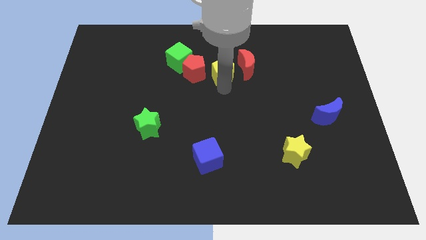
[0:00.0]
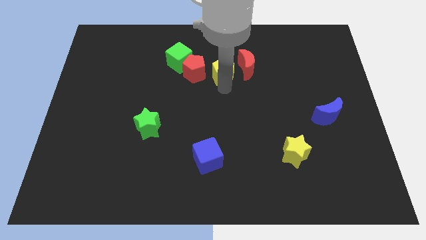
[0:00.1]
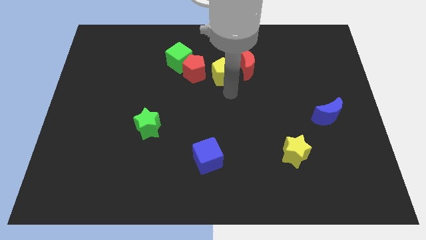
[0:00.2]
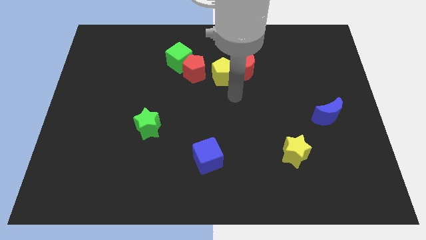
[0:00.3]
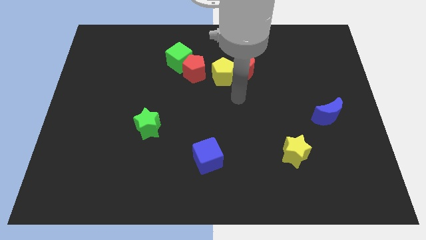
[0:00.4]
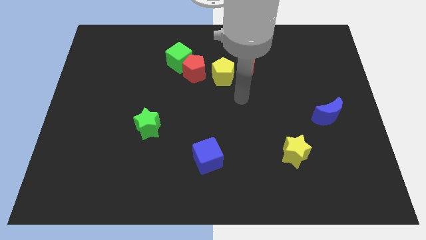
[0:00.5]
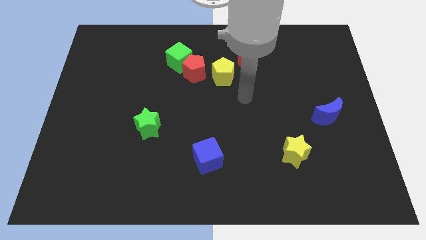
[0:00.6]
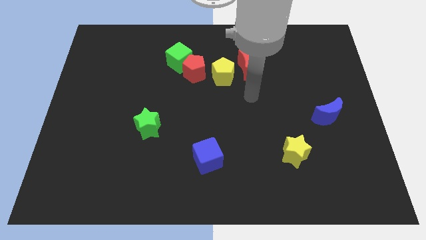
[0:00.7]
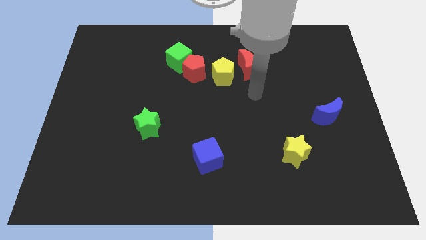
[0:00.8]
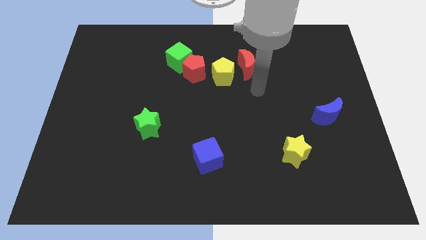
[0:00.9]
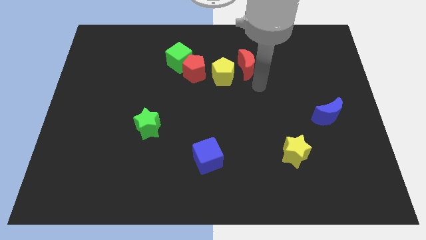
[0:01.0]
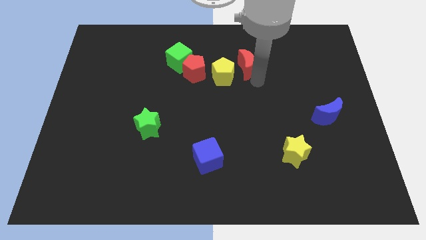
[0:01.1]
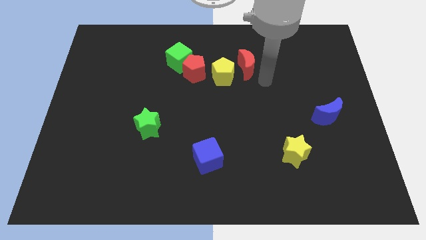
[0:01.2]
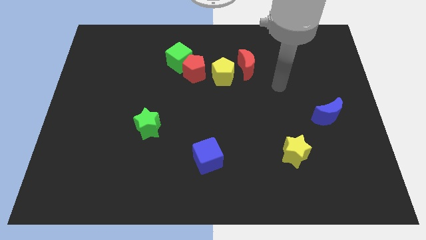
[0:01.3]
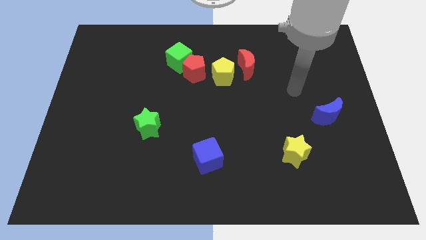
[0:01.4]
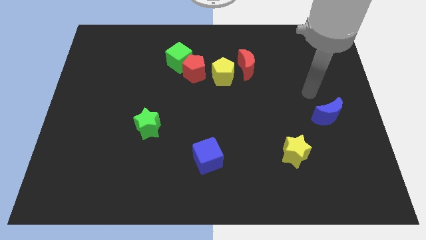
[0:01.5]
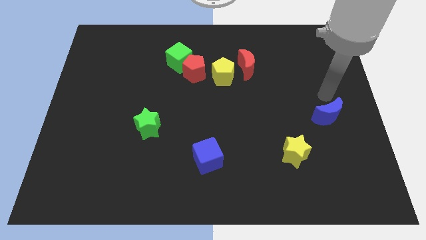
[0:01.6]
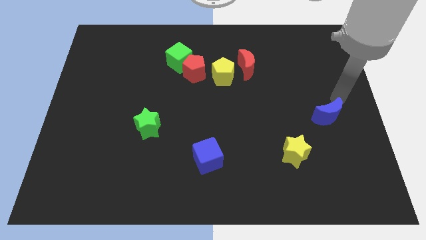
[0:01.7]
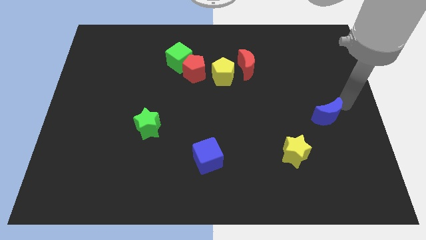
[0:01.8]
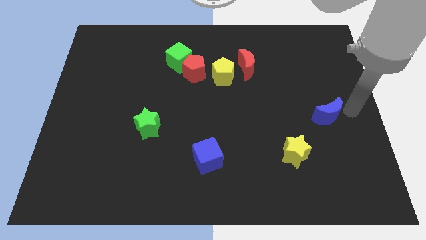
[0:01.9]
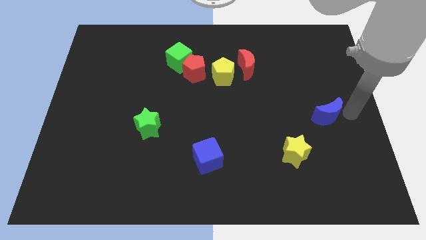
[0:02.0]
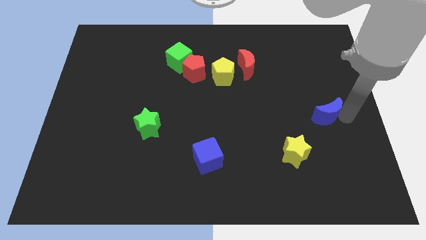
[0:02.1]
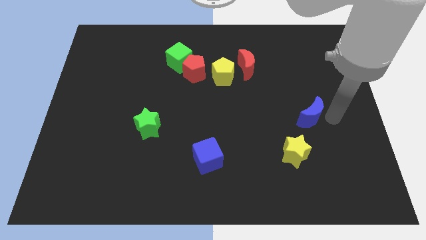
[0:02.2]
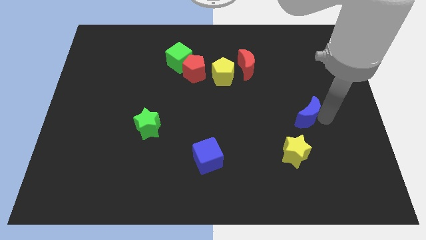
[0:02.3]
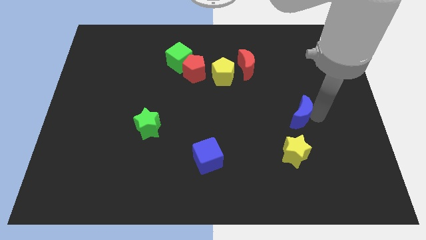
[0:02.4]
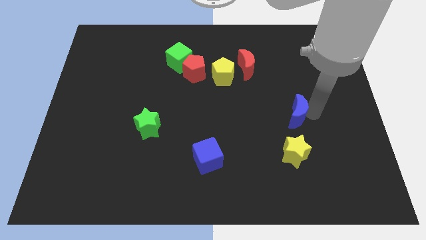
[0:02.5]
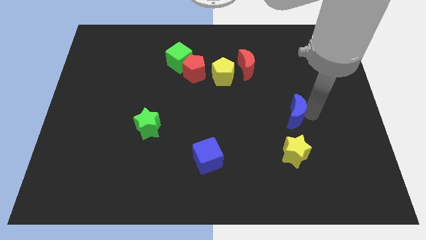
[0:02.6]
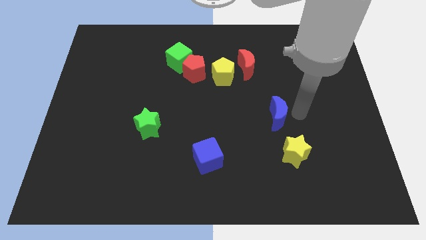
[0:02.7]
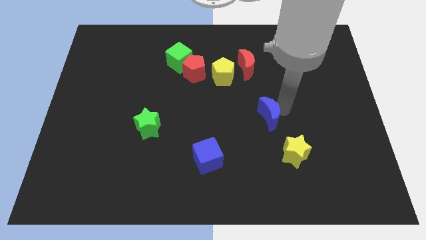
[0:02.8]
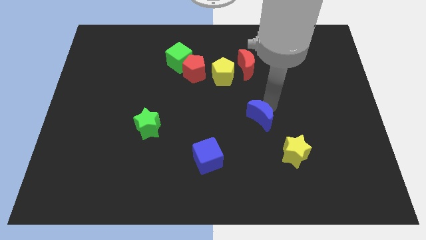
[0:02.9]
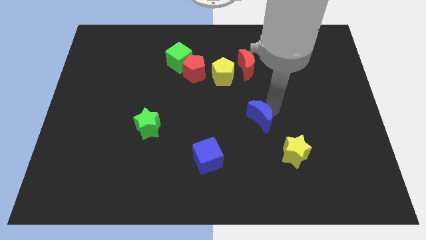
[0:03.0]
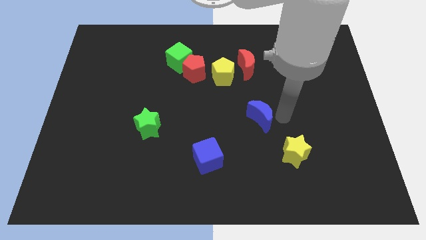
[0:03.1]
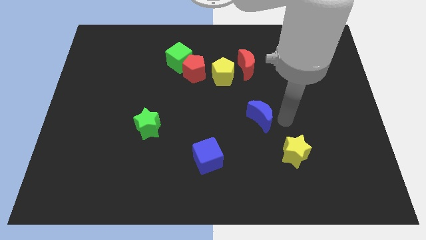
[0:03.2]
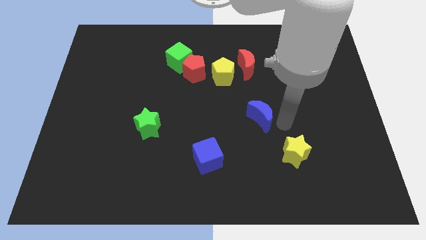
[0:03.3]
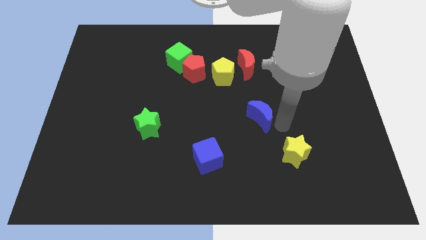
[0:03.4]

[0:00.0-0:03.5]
slide the blue crescent towards the center

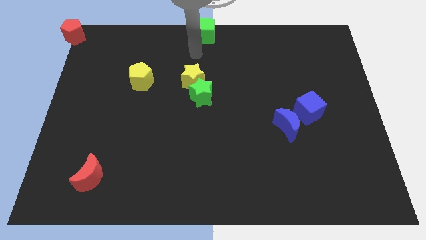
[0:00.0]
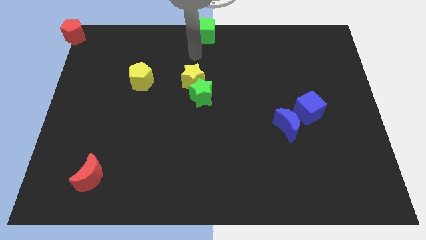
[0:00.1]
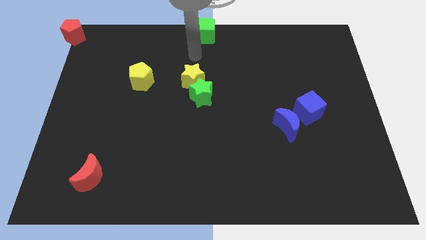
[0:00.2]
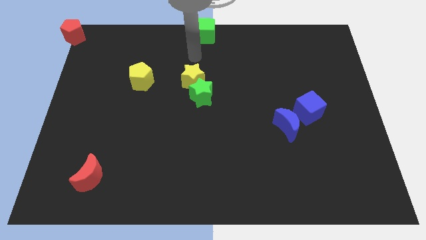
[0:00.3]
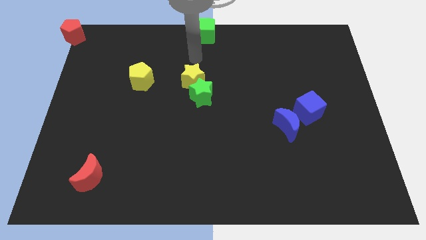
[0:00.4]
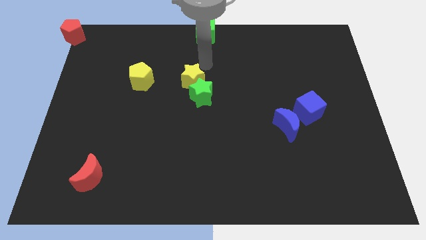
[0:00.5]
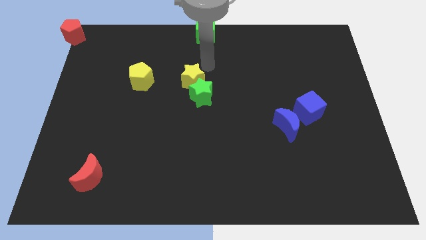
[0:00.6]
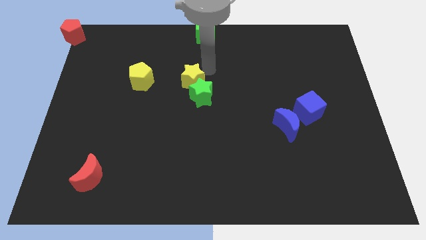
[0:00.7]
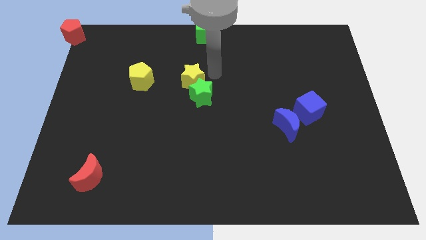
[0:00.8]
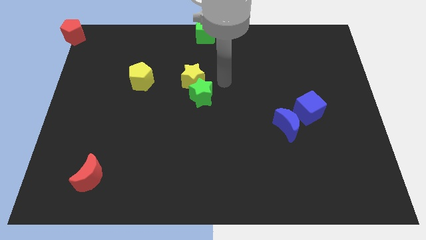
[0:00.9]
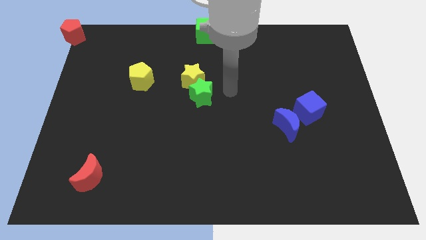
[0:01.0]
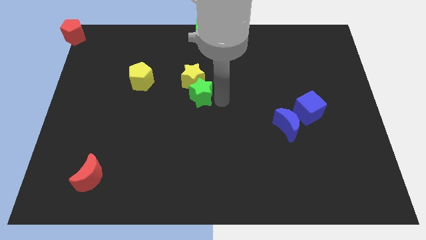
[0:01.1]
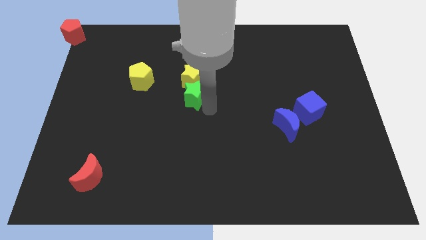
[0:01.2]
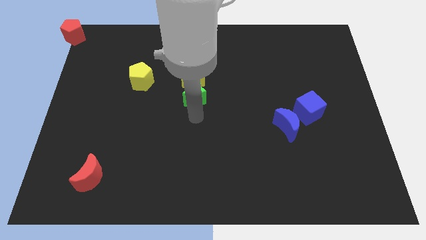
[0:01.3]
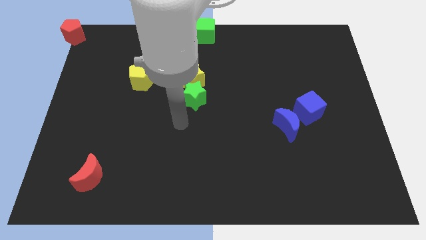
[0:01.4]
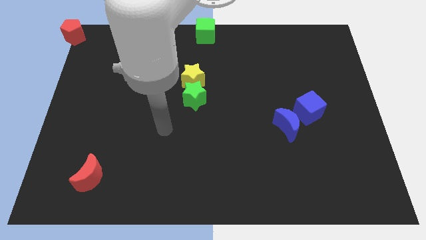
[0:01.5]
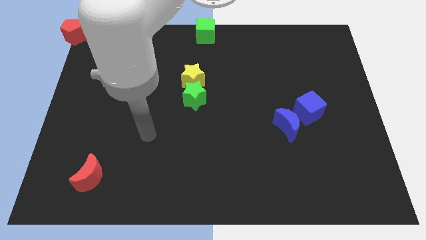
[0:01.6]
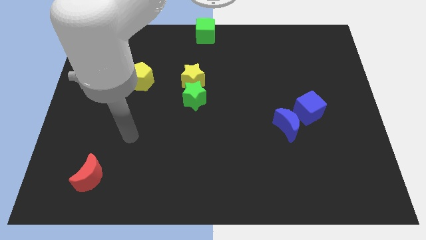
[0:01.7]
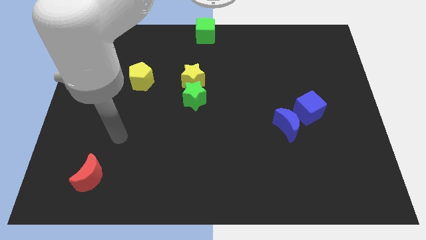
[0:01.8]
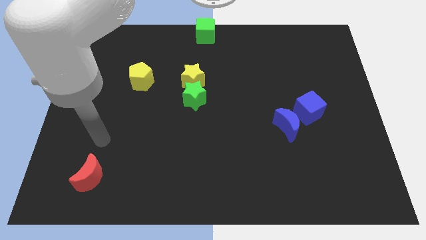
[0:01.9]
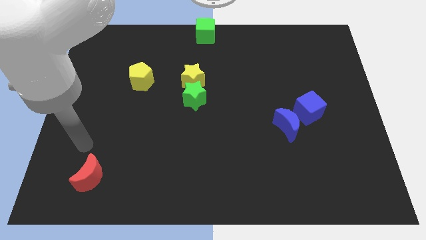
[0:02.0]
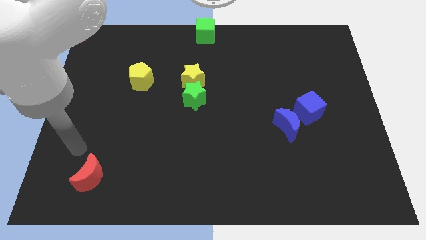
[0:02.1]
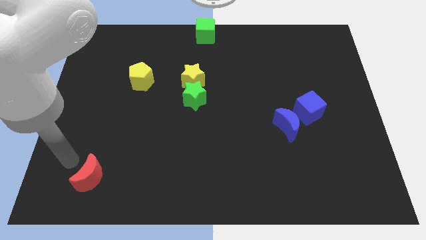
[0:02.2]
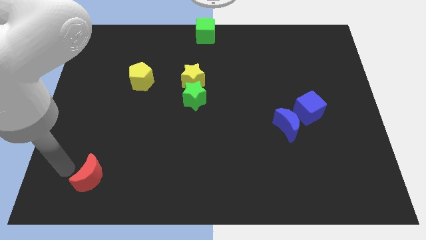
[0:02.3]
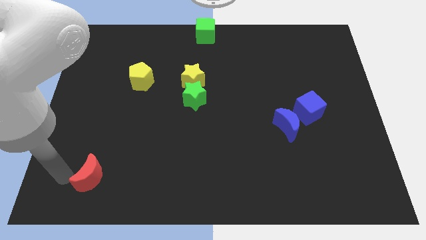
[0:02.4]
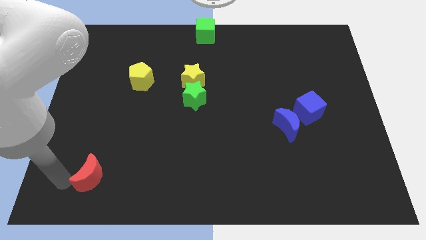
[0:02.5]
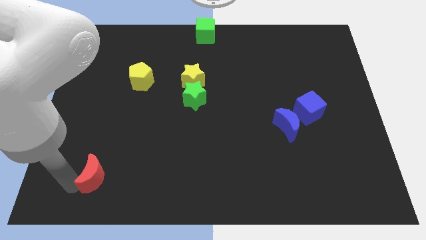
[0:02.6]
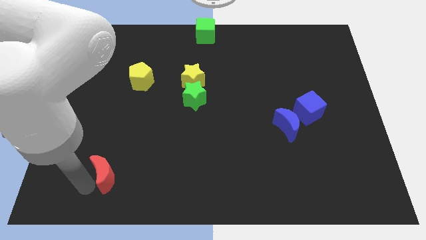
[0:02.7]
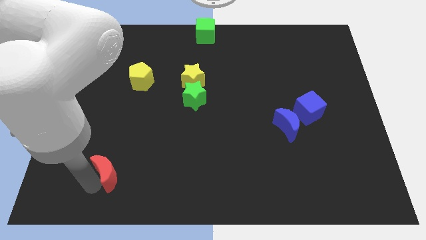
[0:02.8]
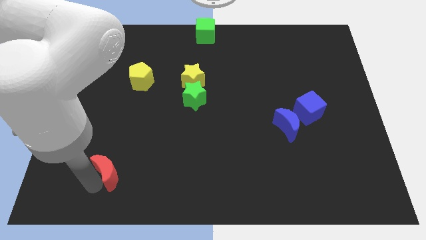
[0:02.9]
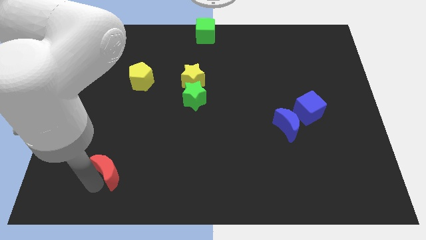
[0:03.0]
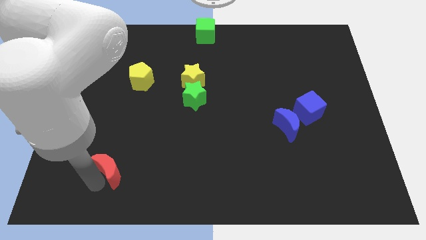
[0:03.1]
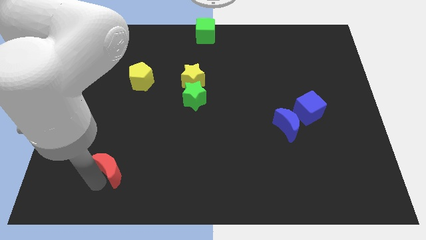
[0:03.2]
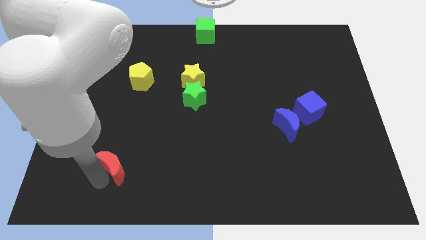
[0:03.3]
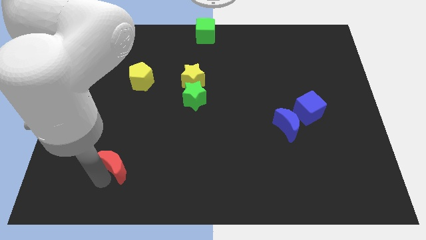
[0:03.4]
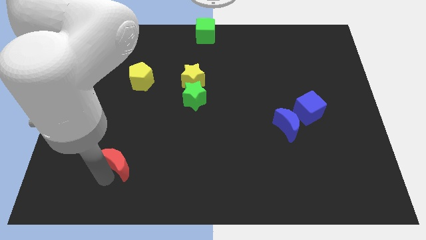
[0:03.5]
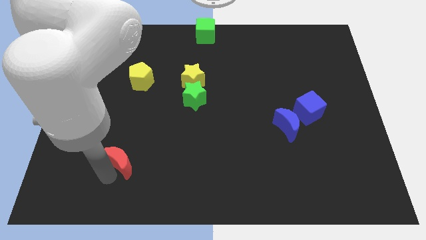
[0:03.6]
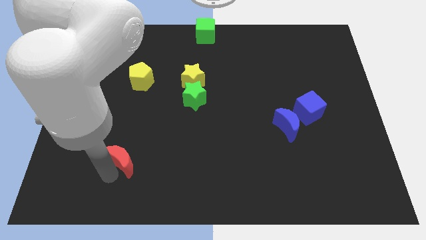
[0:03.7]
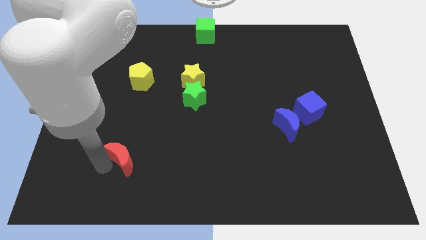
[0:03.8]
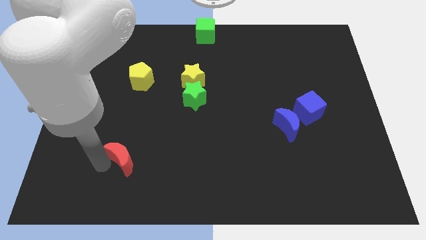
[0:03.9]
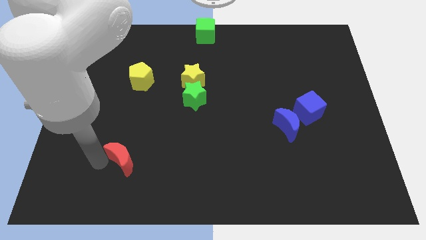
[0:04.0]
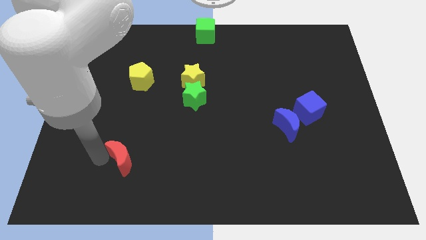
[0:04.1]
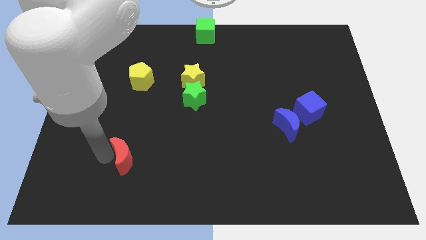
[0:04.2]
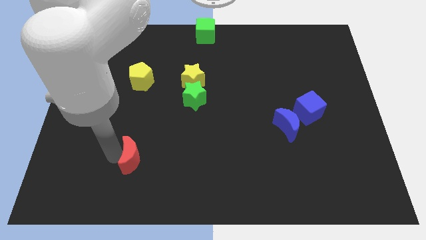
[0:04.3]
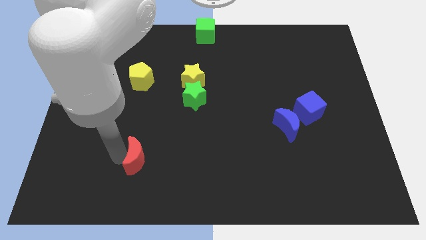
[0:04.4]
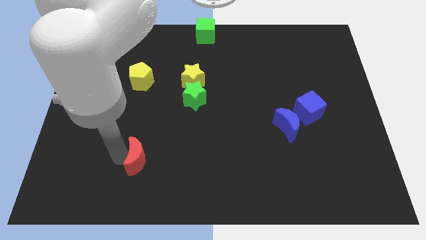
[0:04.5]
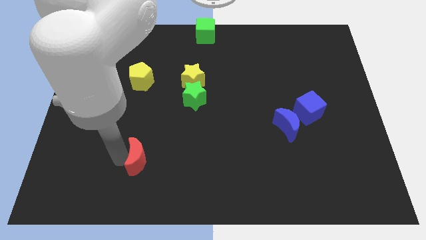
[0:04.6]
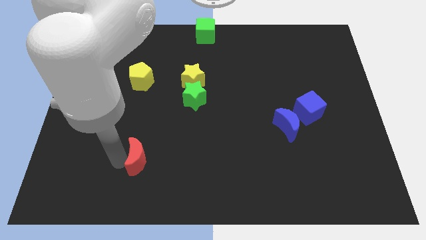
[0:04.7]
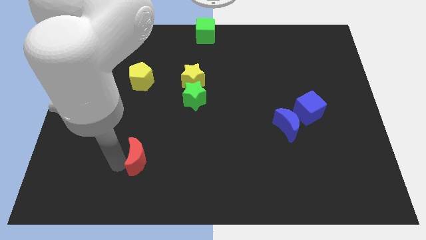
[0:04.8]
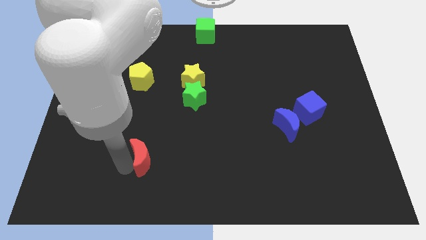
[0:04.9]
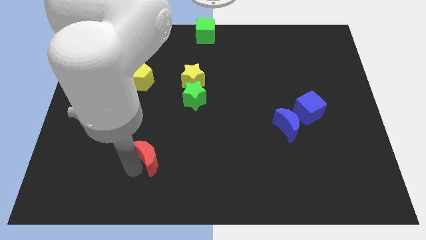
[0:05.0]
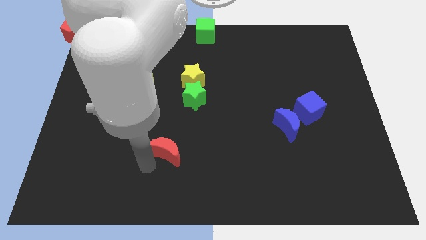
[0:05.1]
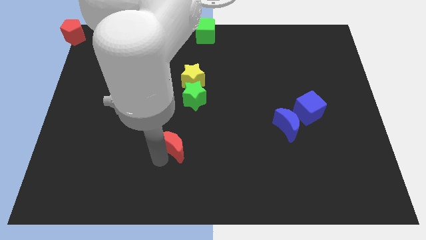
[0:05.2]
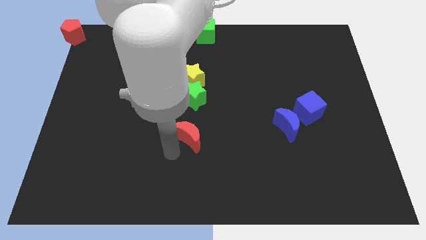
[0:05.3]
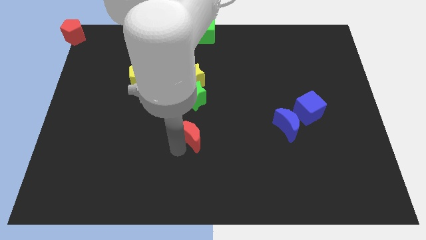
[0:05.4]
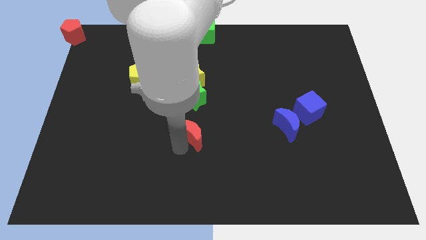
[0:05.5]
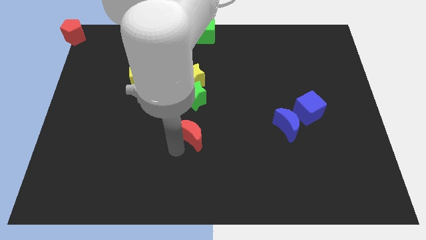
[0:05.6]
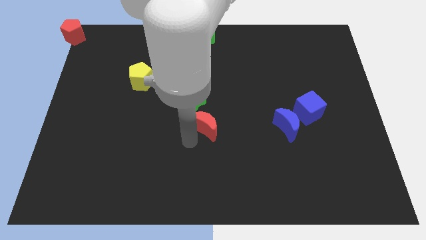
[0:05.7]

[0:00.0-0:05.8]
move the red crescent below the green star
